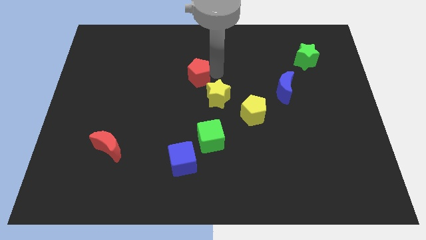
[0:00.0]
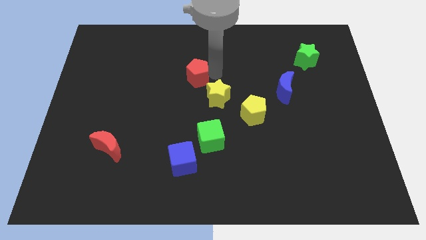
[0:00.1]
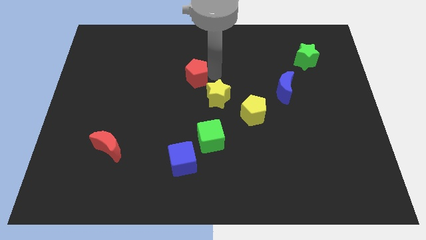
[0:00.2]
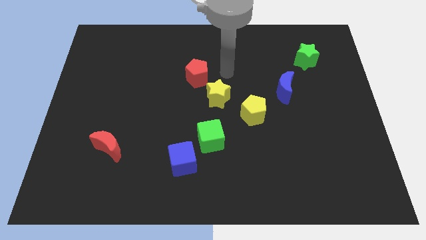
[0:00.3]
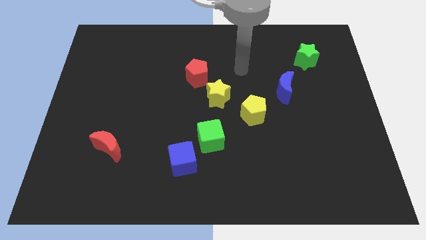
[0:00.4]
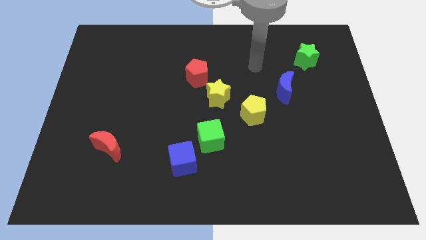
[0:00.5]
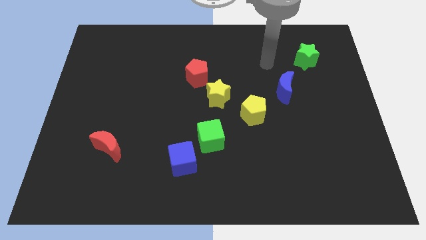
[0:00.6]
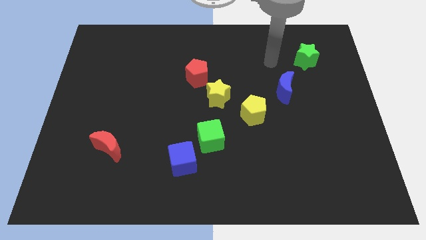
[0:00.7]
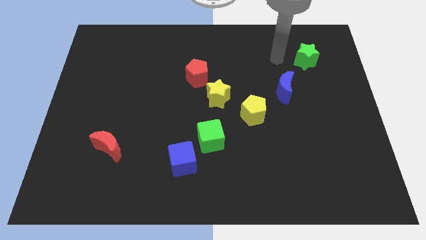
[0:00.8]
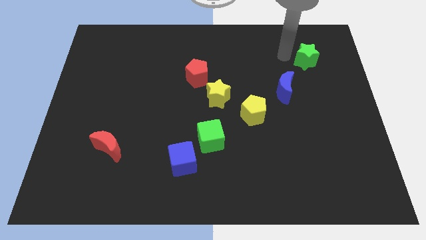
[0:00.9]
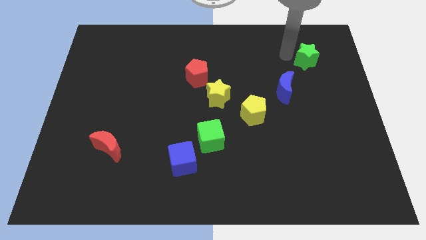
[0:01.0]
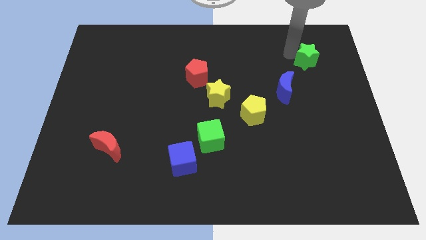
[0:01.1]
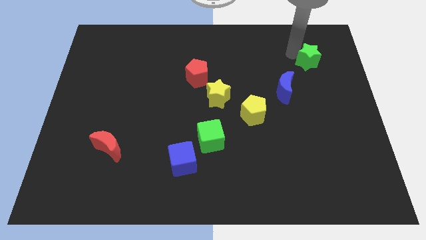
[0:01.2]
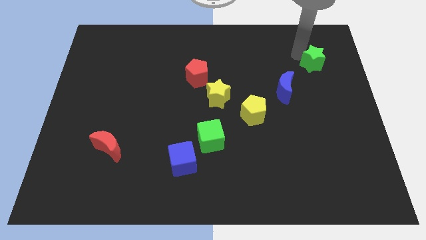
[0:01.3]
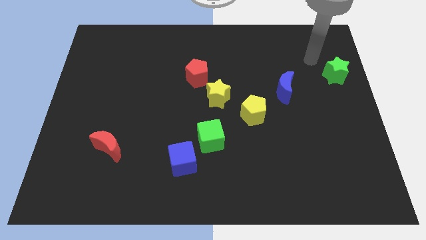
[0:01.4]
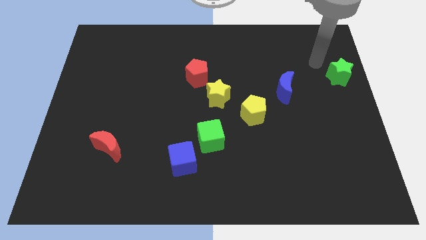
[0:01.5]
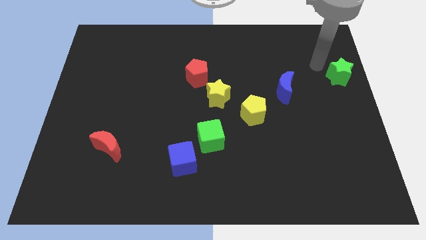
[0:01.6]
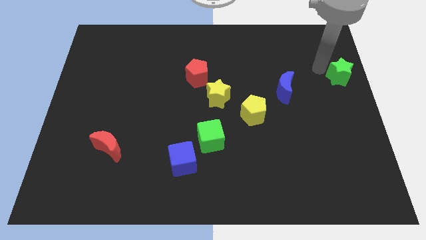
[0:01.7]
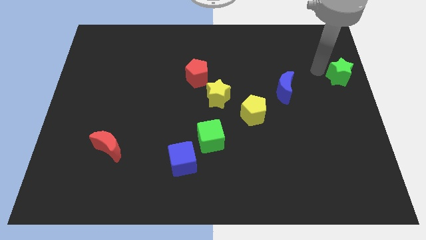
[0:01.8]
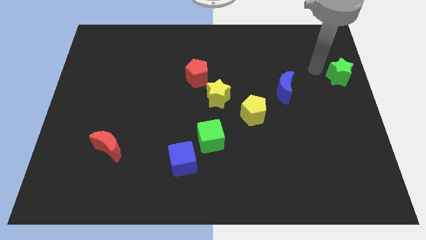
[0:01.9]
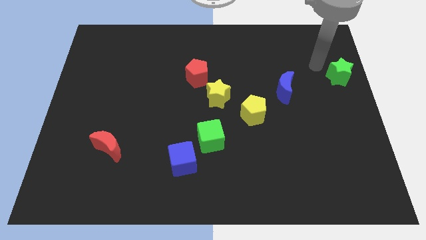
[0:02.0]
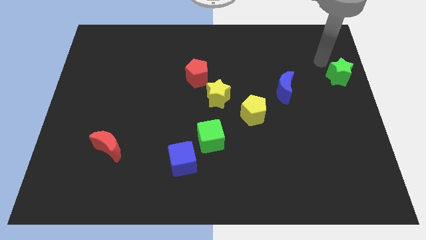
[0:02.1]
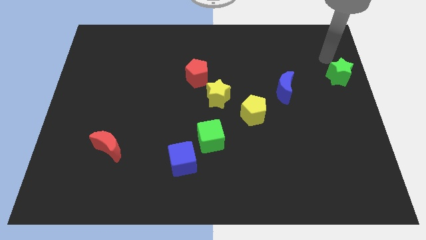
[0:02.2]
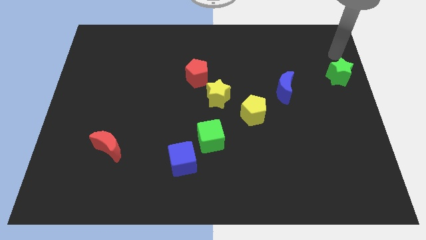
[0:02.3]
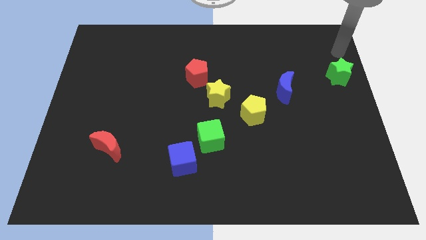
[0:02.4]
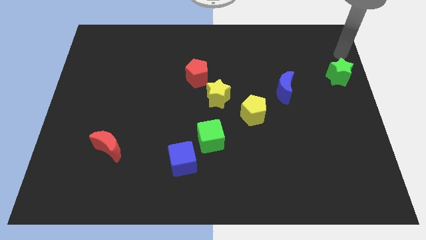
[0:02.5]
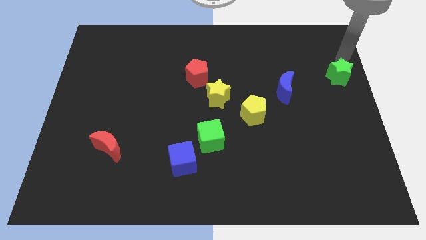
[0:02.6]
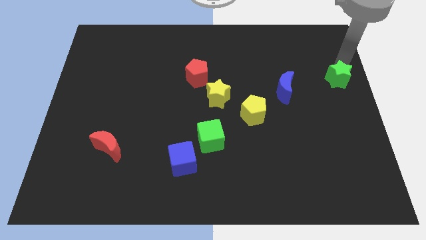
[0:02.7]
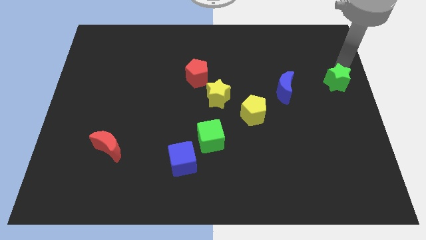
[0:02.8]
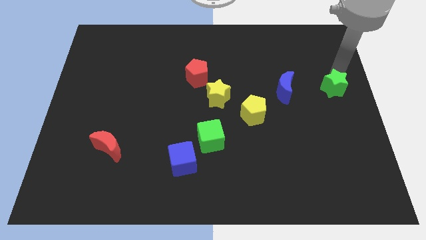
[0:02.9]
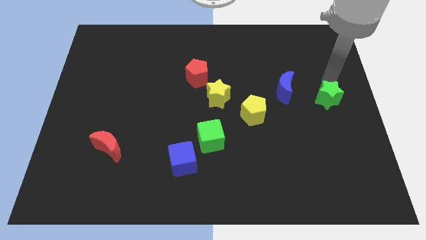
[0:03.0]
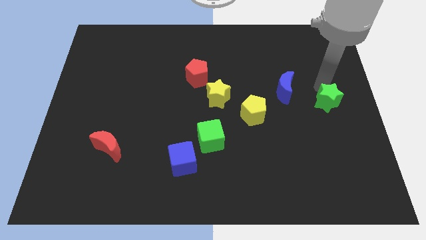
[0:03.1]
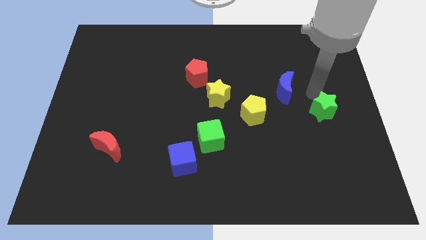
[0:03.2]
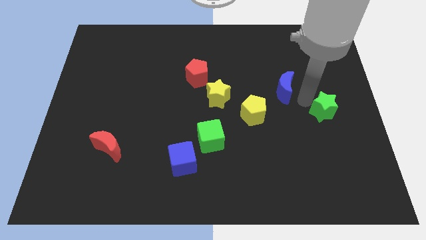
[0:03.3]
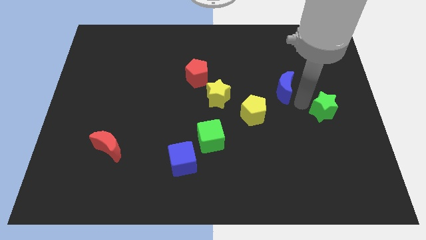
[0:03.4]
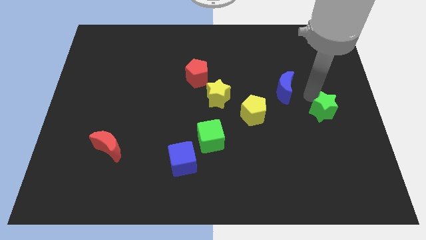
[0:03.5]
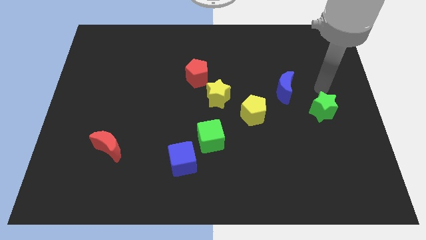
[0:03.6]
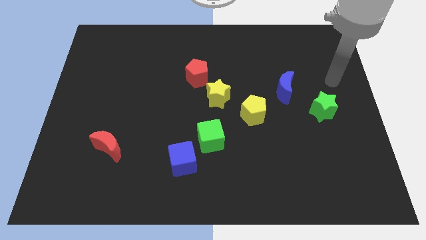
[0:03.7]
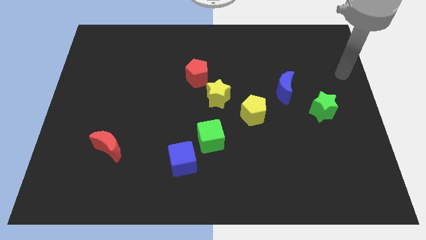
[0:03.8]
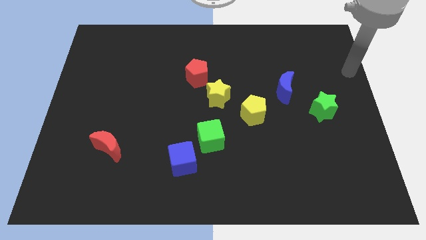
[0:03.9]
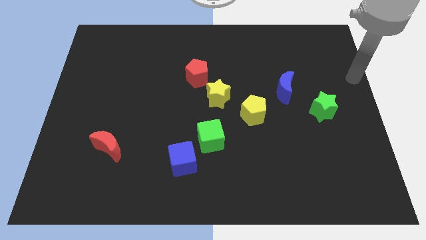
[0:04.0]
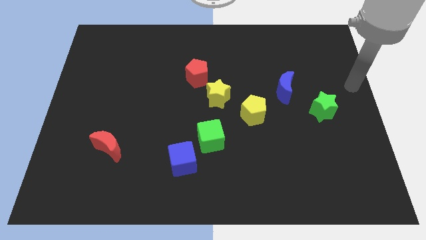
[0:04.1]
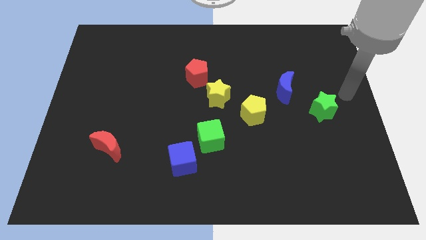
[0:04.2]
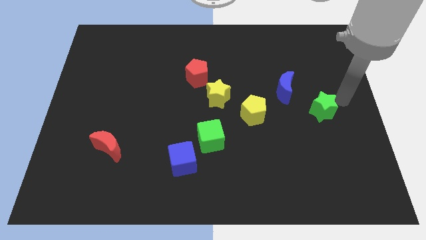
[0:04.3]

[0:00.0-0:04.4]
place the green star right to the yellow pentagon

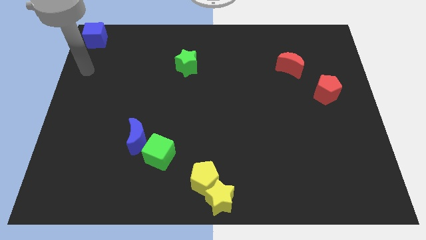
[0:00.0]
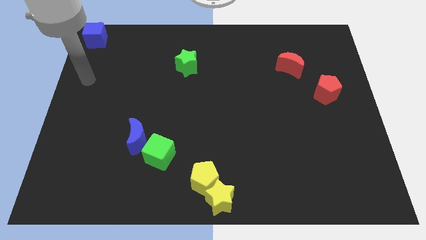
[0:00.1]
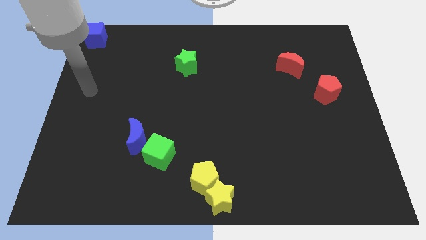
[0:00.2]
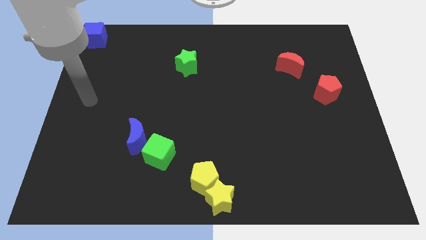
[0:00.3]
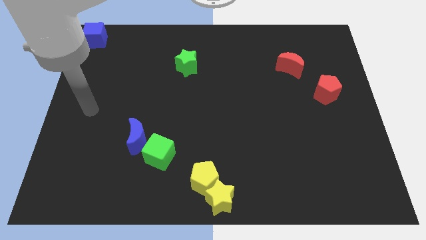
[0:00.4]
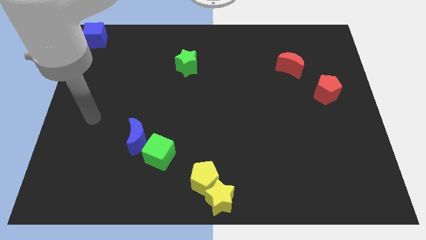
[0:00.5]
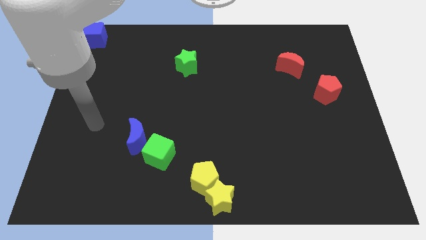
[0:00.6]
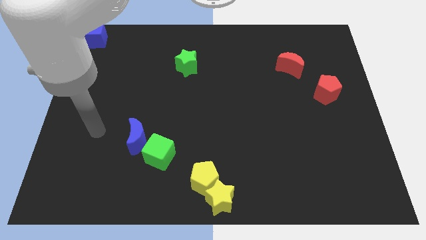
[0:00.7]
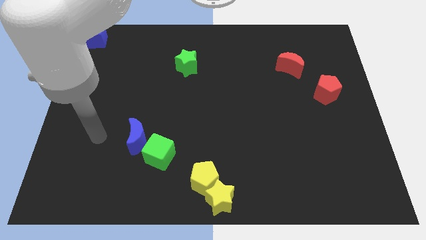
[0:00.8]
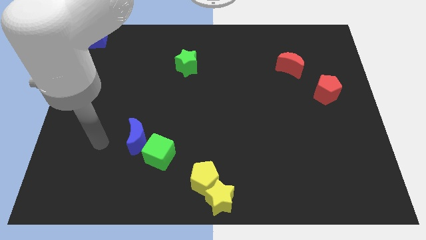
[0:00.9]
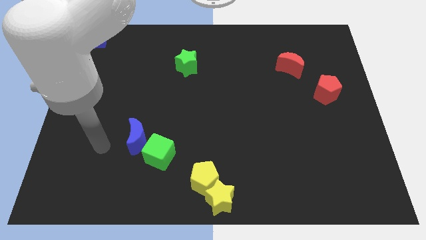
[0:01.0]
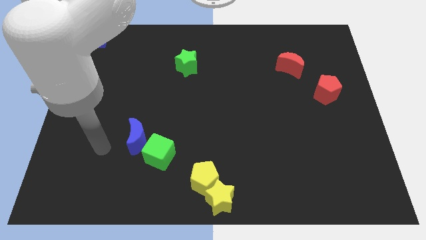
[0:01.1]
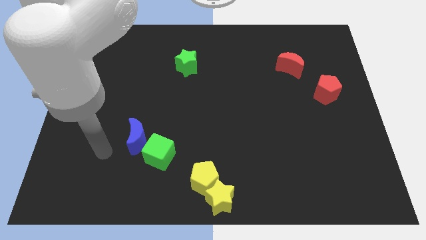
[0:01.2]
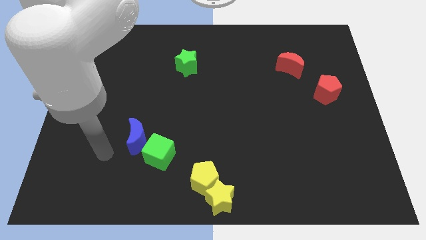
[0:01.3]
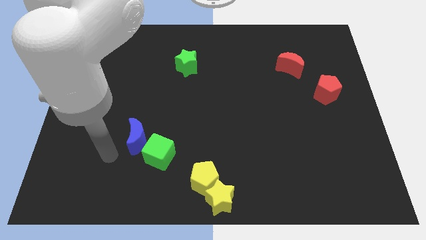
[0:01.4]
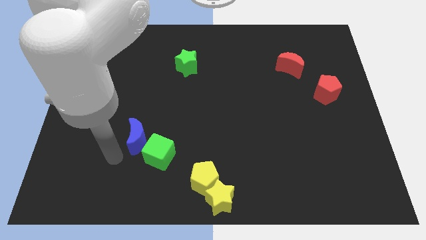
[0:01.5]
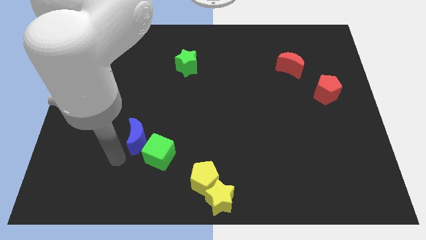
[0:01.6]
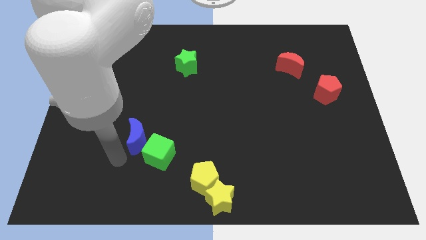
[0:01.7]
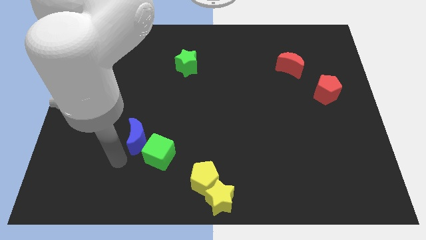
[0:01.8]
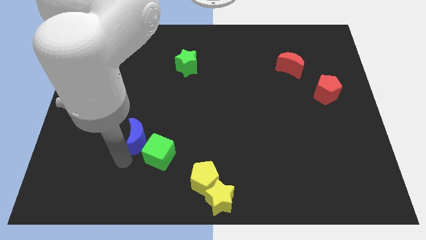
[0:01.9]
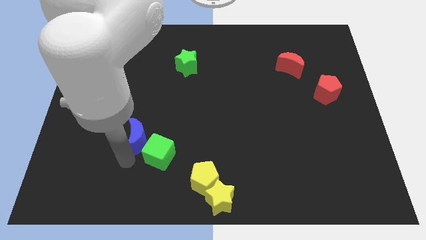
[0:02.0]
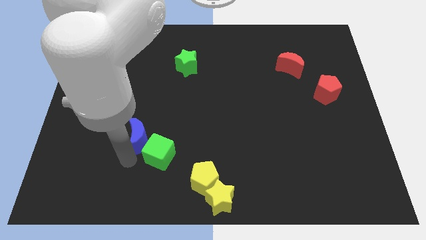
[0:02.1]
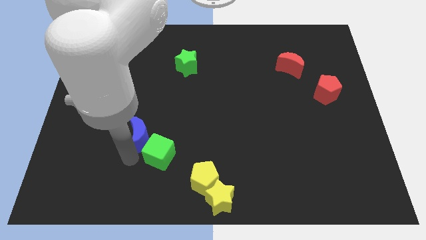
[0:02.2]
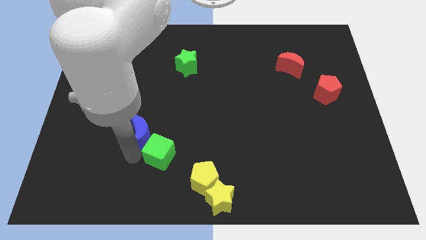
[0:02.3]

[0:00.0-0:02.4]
touch the bottom of blue crescent

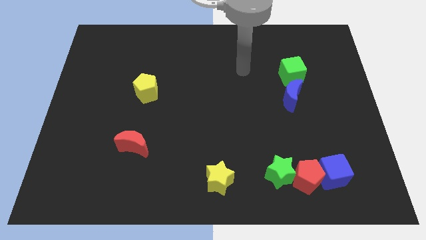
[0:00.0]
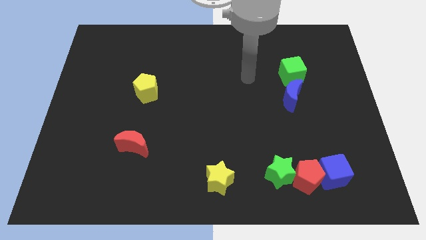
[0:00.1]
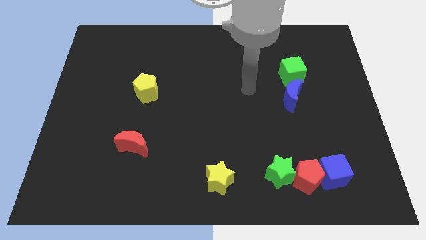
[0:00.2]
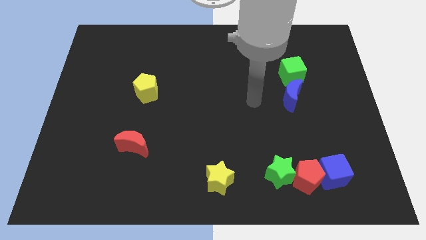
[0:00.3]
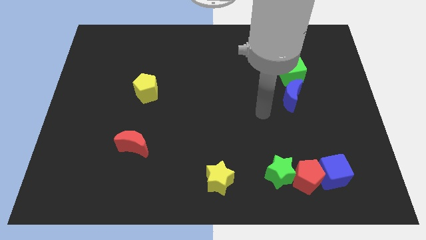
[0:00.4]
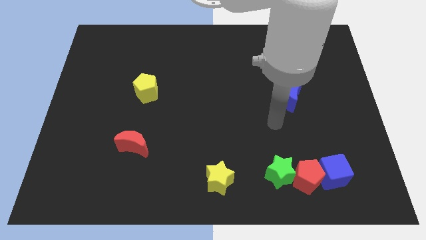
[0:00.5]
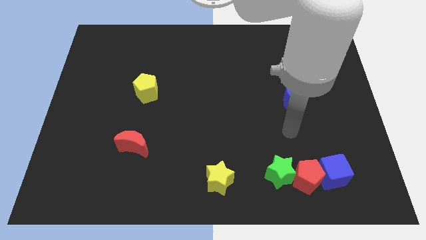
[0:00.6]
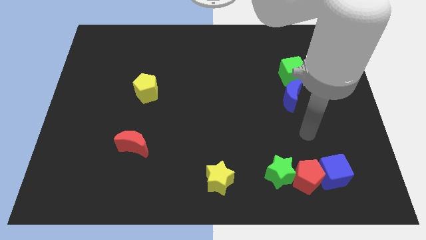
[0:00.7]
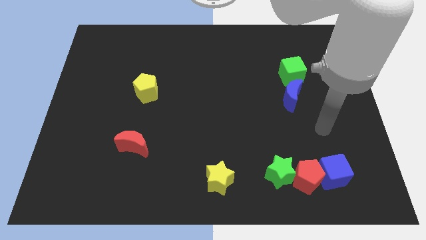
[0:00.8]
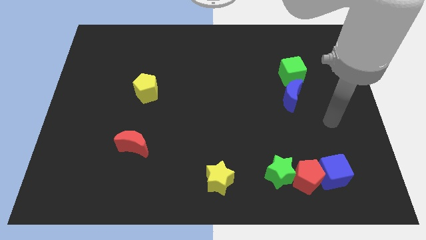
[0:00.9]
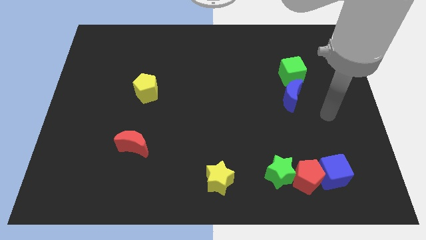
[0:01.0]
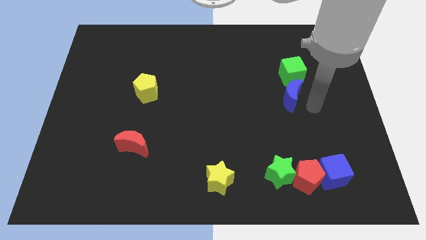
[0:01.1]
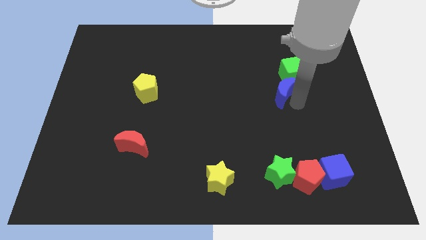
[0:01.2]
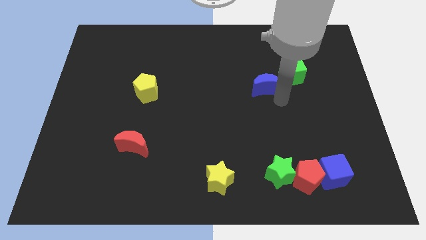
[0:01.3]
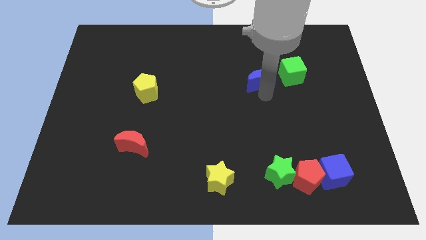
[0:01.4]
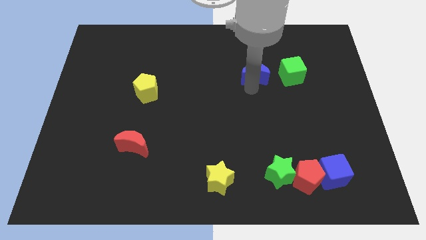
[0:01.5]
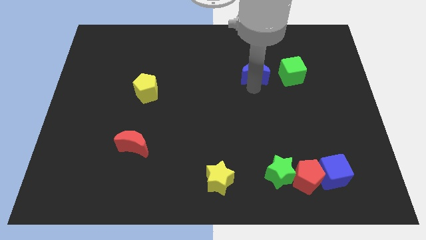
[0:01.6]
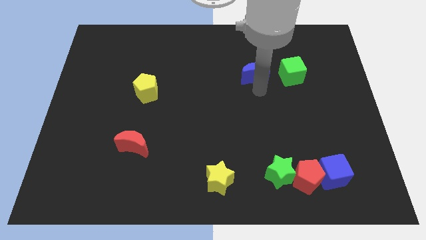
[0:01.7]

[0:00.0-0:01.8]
push the blue moo to the left of green cube

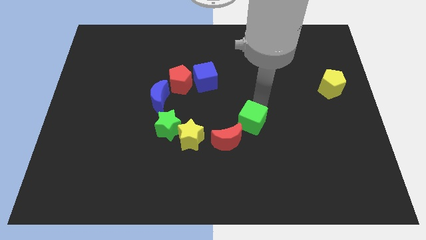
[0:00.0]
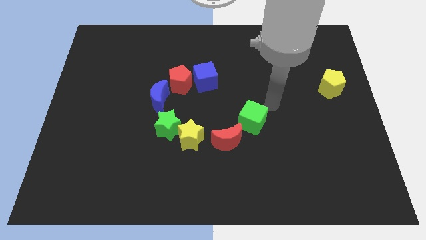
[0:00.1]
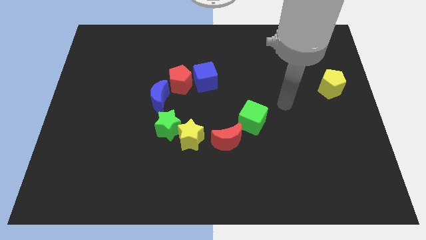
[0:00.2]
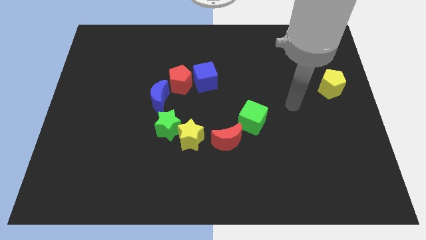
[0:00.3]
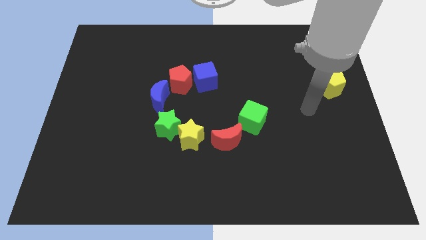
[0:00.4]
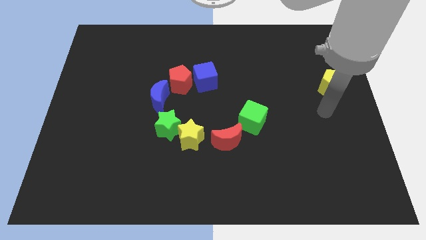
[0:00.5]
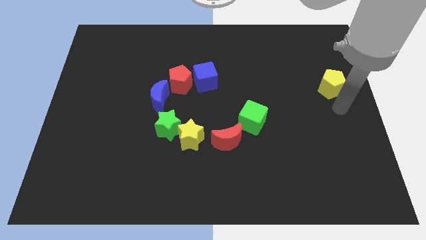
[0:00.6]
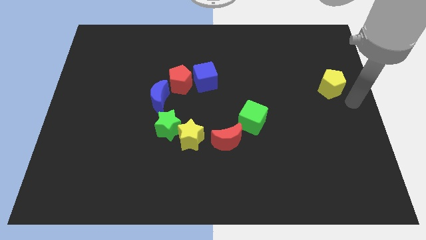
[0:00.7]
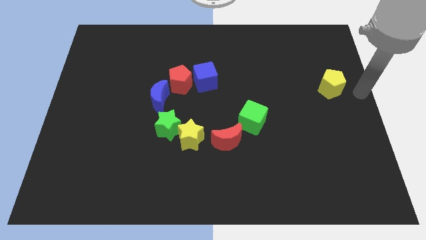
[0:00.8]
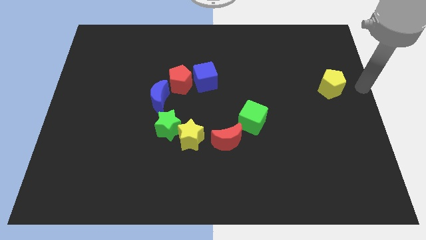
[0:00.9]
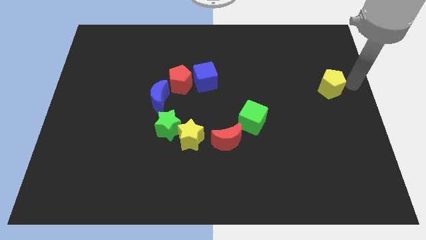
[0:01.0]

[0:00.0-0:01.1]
point your arm at the right of the yellow pentagon
